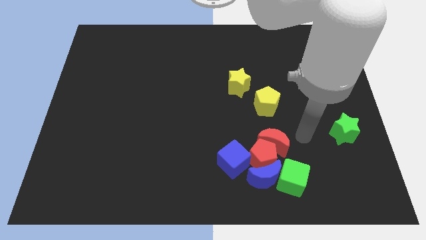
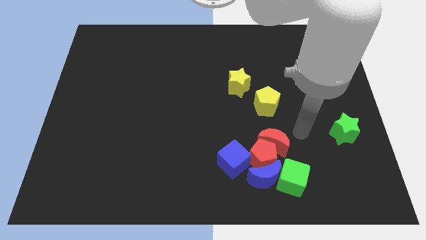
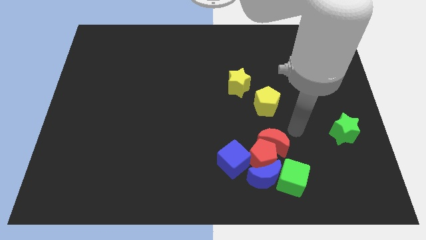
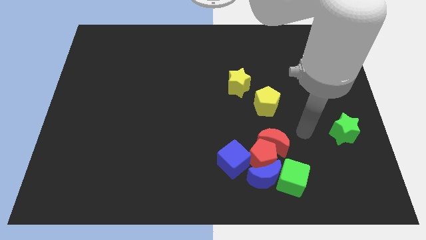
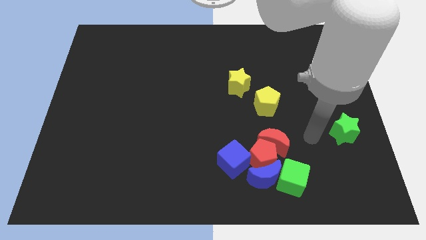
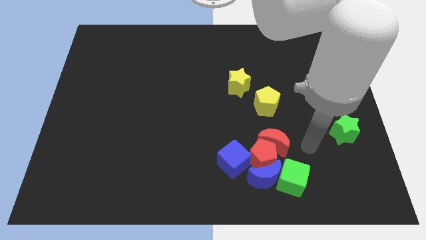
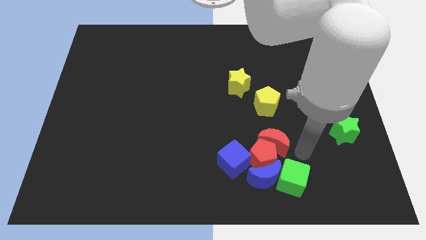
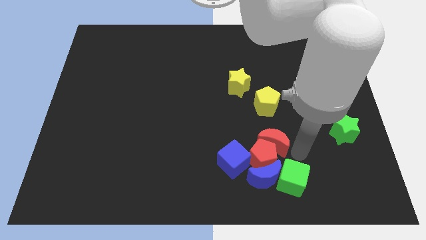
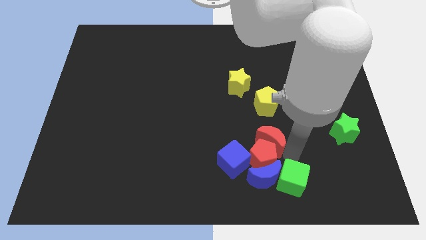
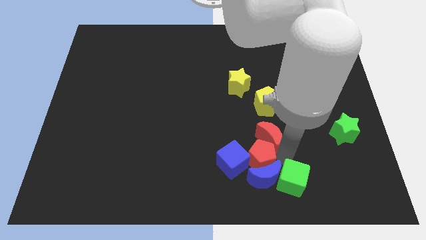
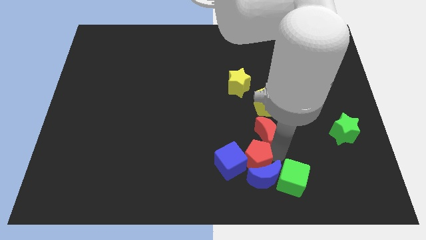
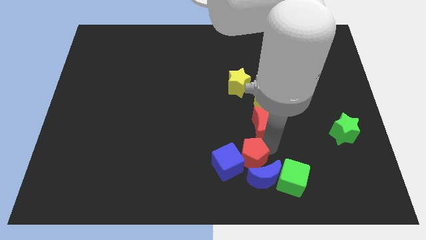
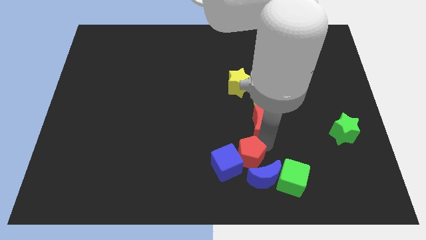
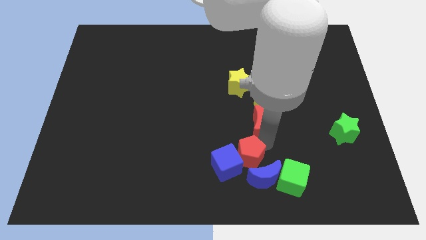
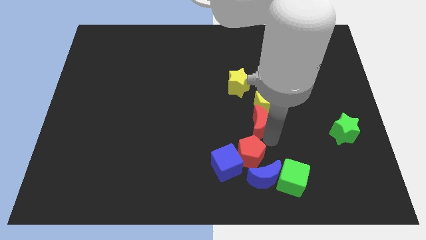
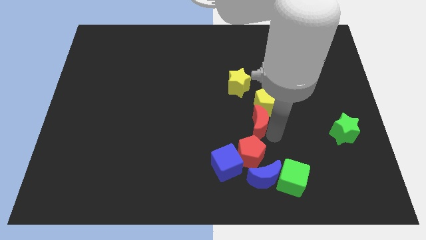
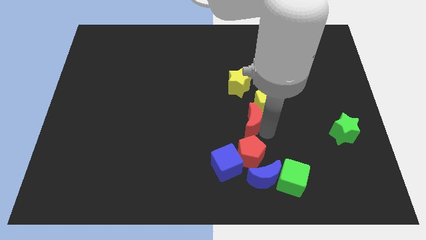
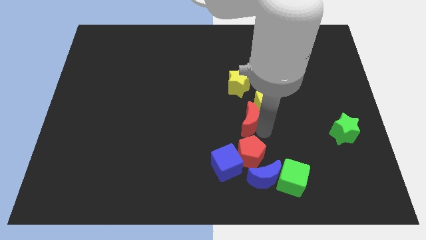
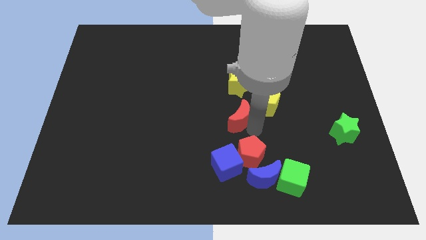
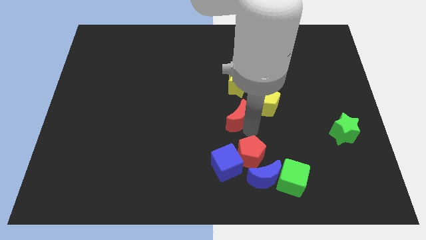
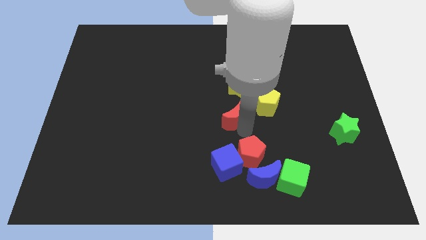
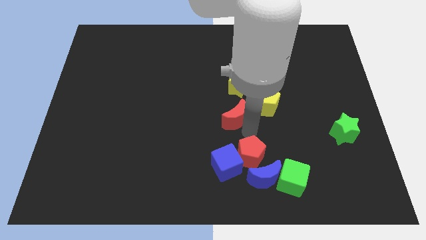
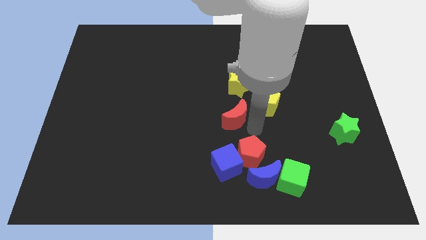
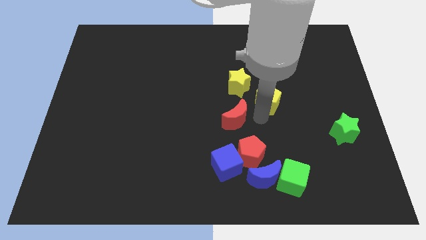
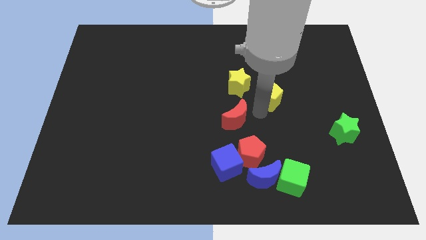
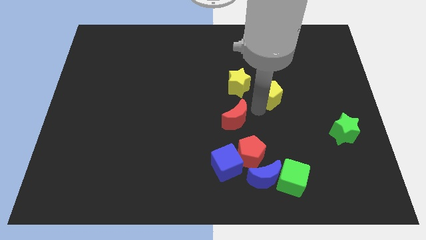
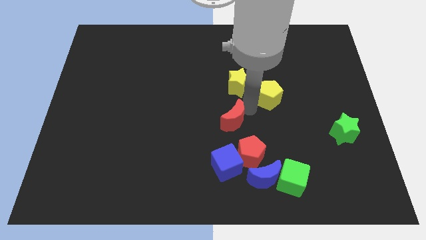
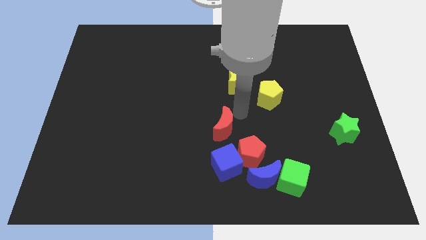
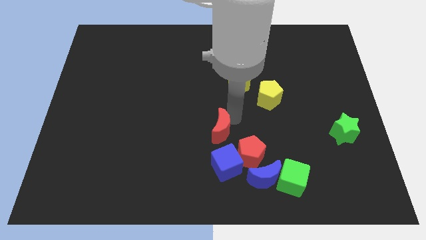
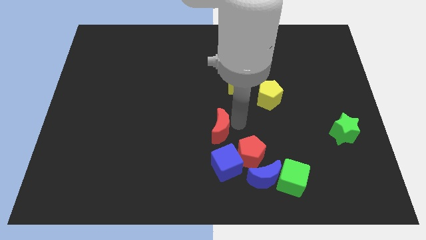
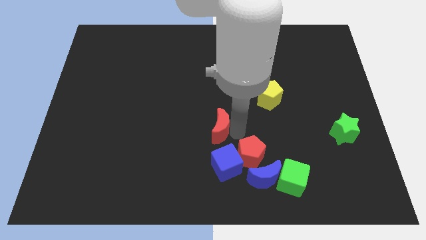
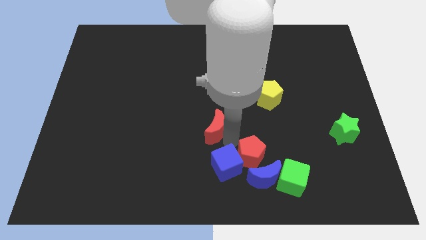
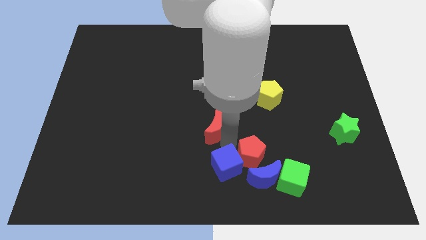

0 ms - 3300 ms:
separate the red moon from the red pentagon

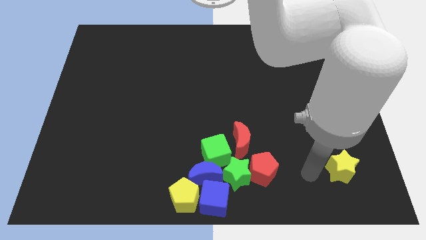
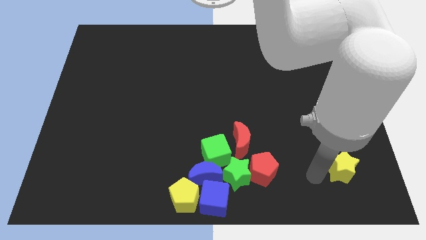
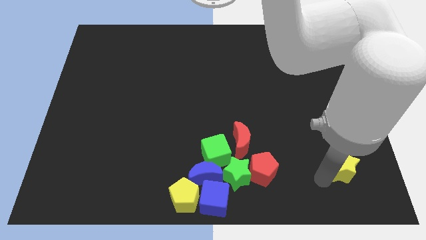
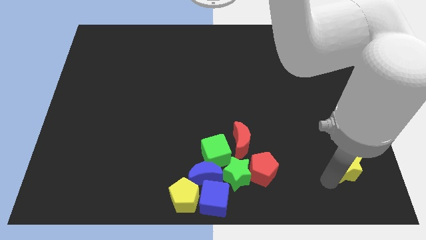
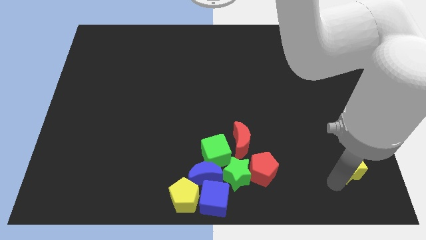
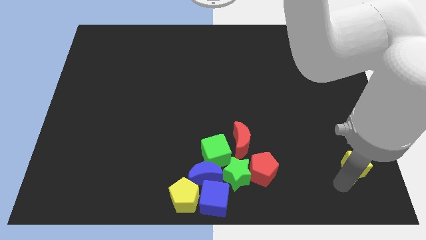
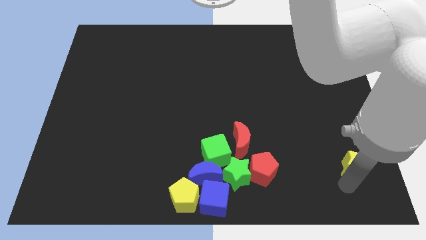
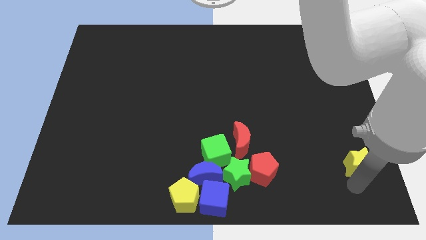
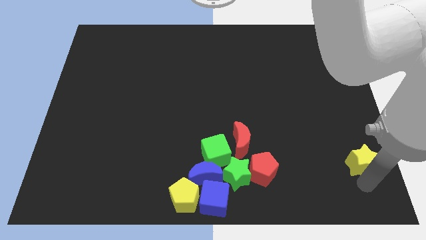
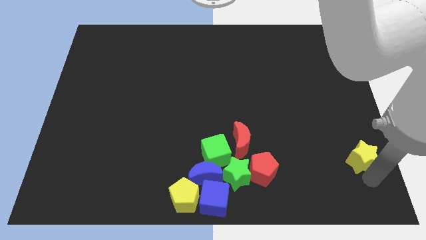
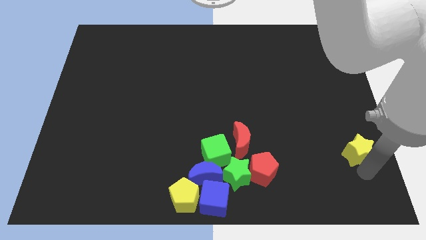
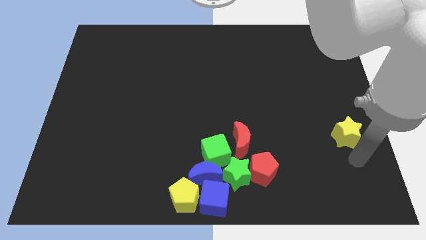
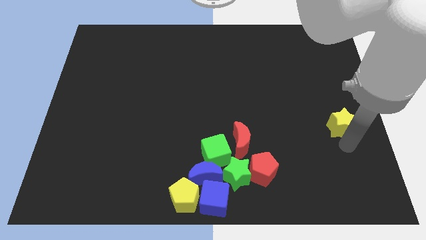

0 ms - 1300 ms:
move the yellow star towards the top

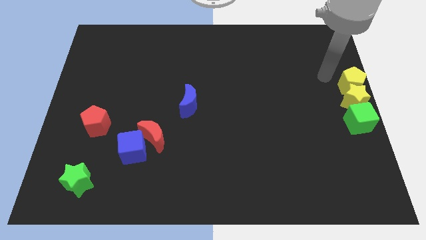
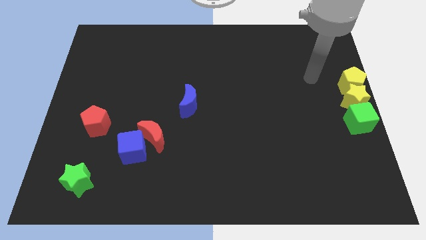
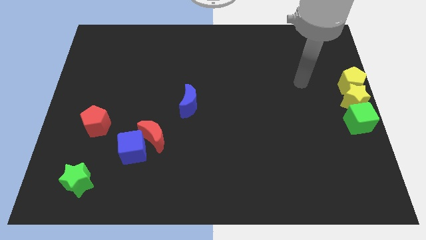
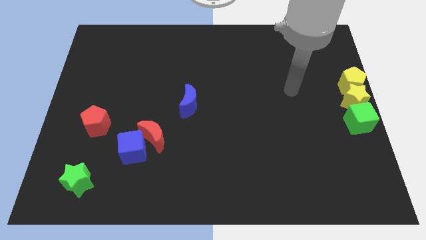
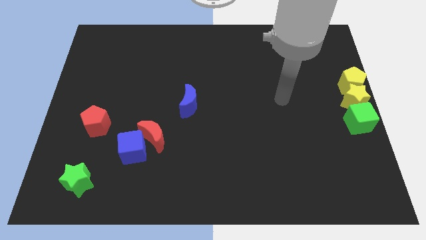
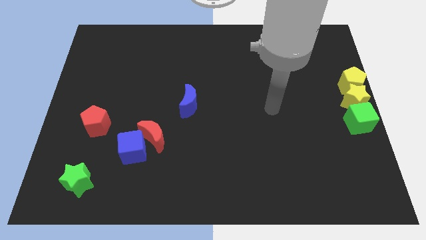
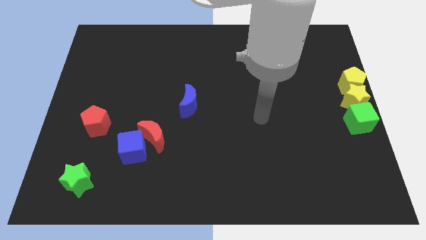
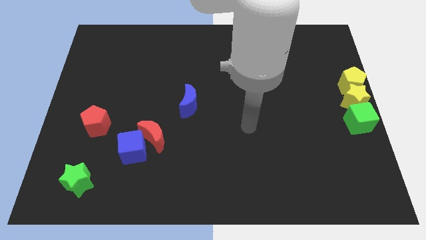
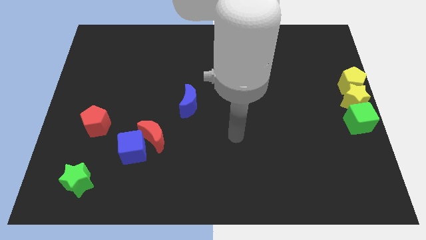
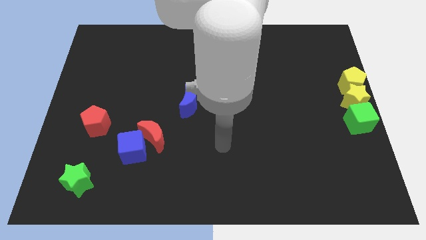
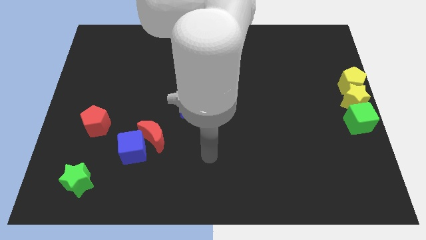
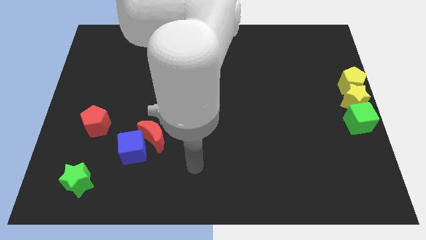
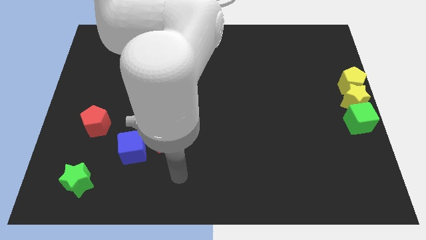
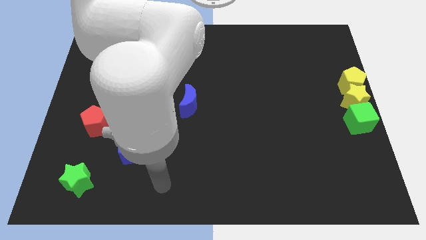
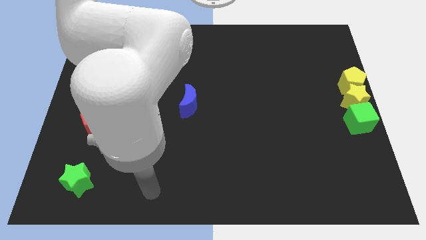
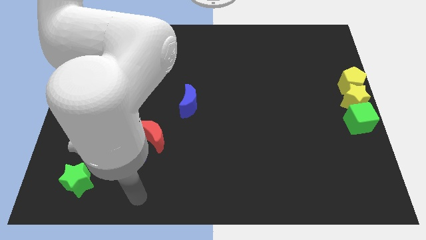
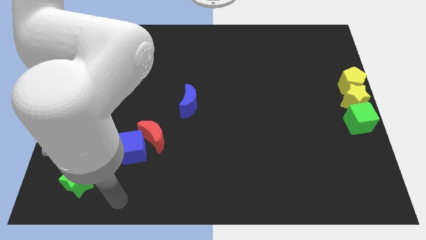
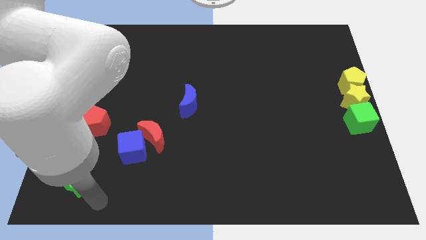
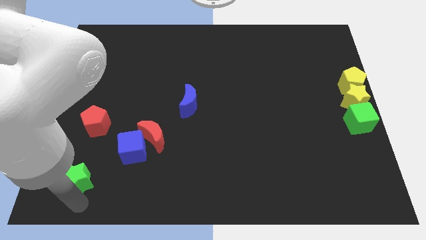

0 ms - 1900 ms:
move the arm towards green star

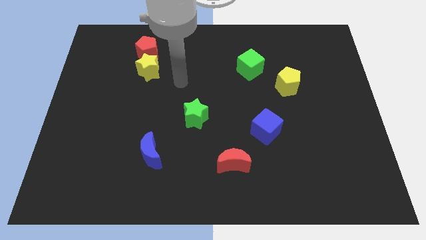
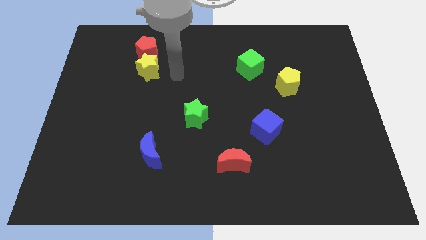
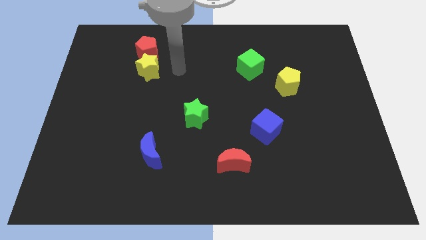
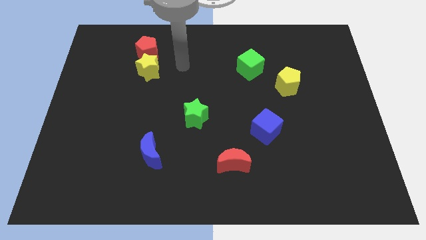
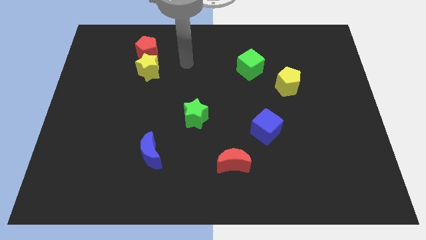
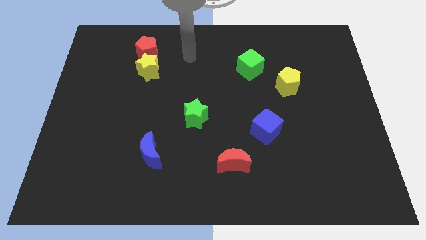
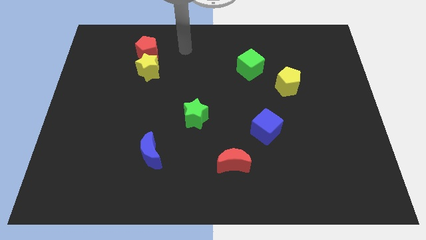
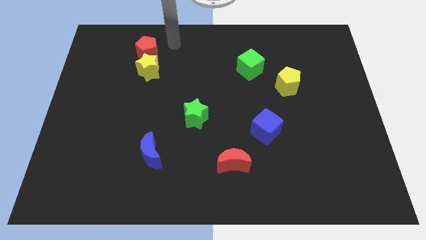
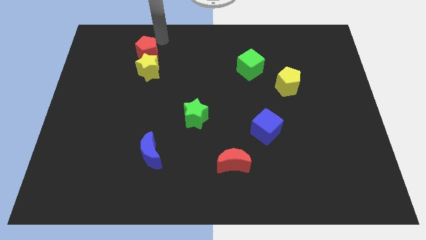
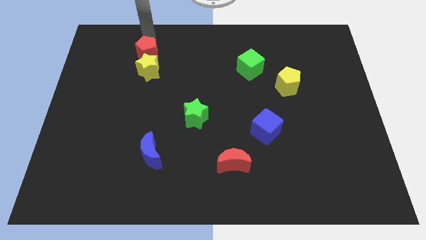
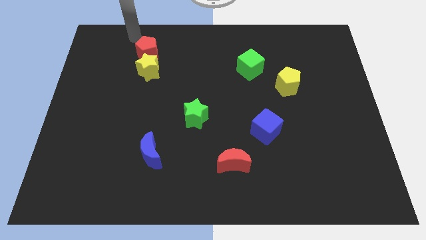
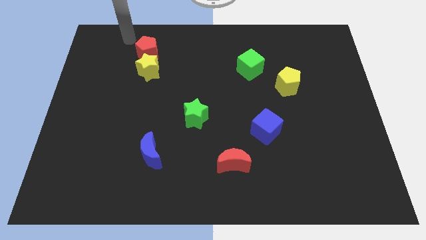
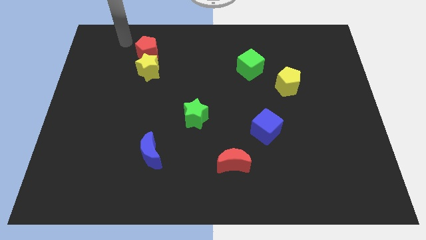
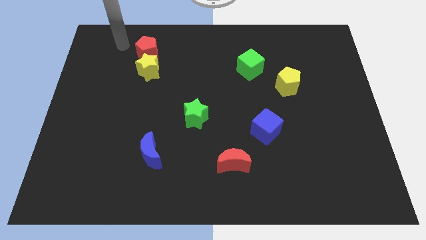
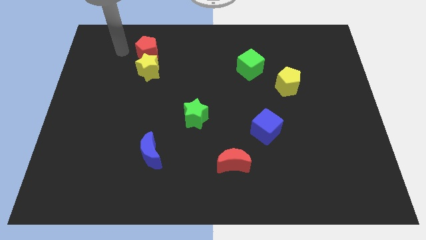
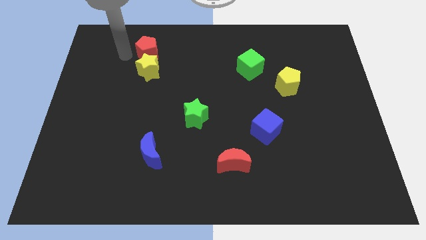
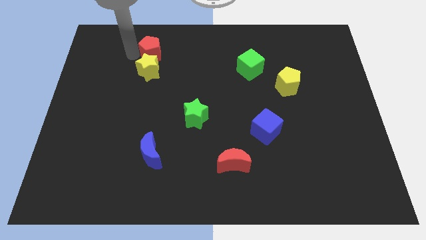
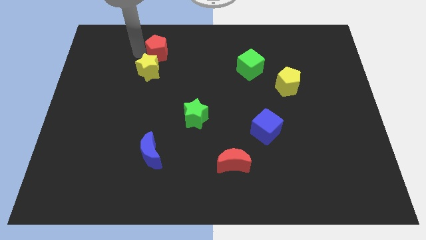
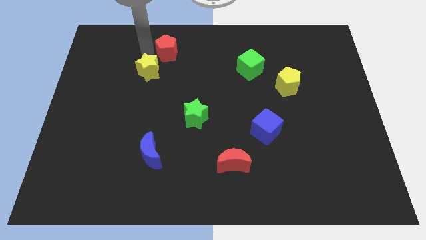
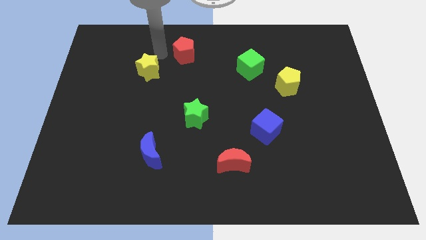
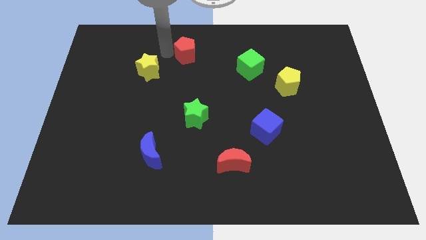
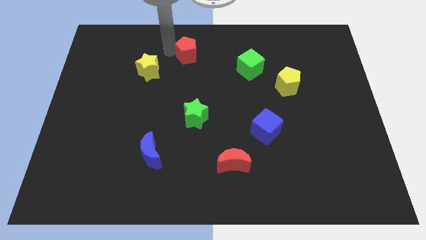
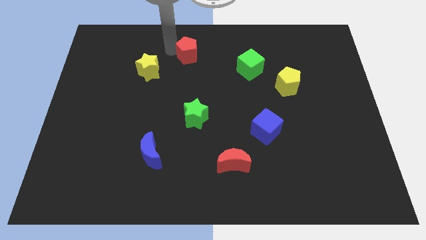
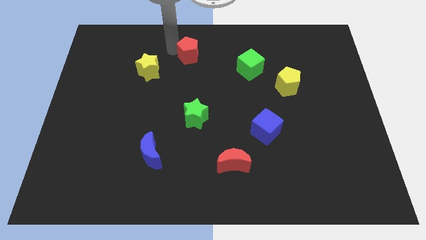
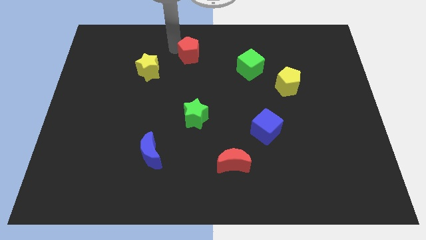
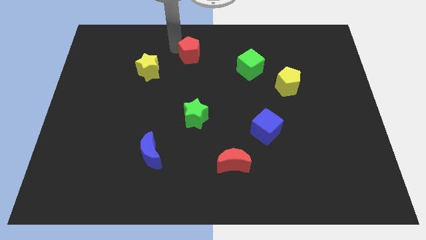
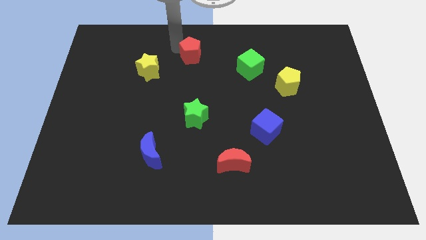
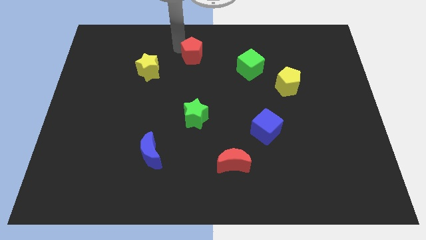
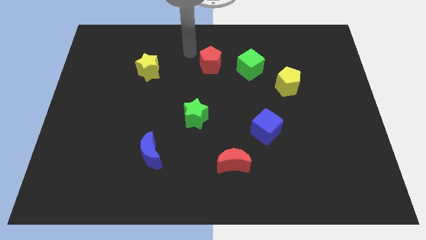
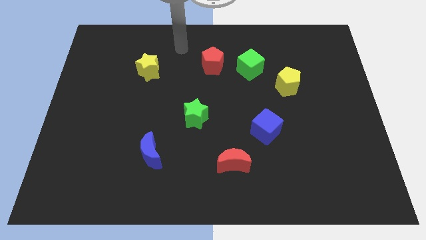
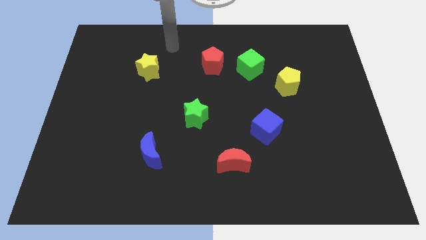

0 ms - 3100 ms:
move the red pentagon to the left of the green cube
